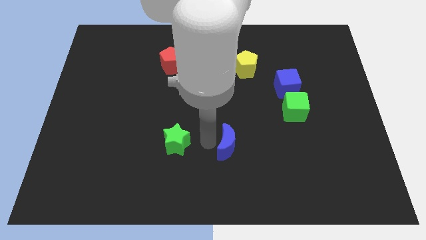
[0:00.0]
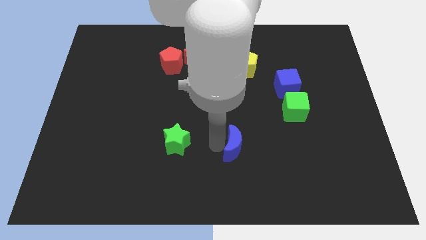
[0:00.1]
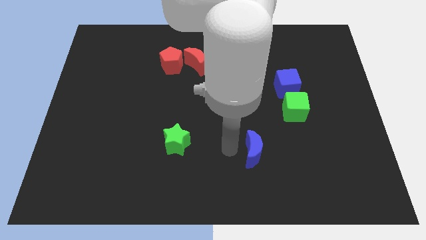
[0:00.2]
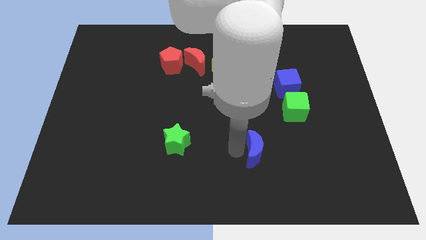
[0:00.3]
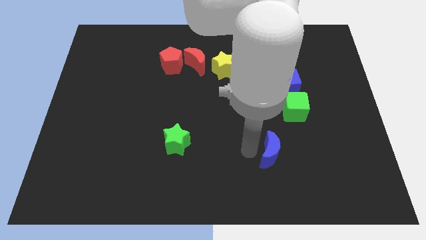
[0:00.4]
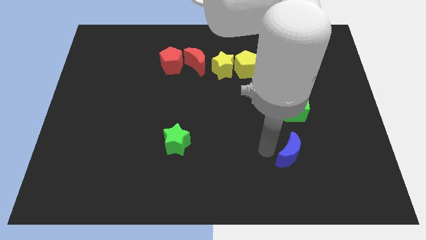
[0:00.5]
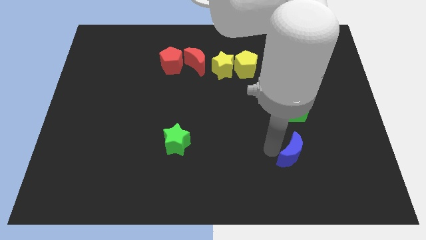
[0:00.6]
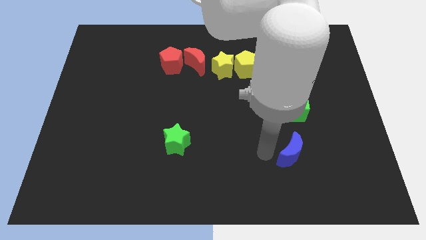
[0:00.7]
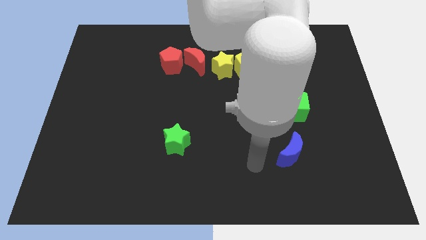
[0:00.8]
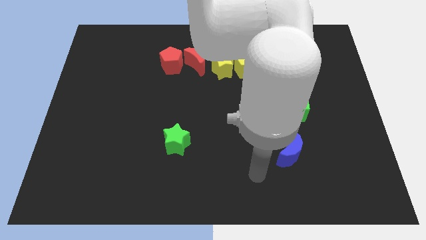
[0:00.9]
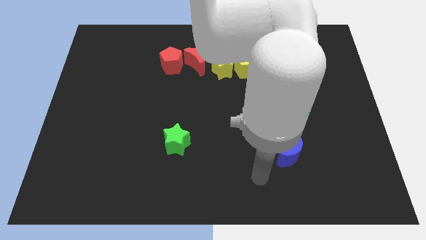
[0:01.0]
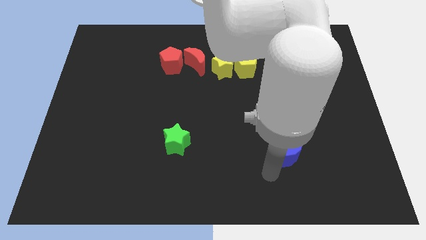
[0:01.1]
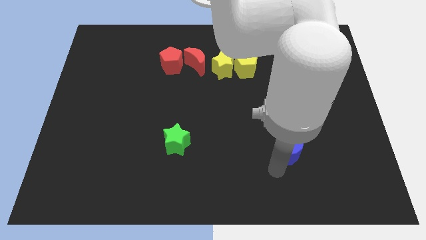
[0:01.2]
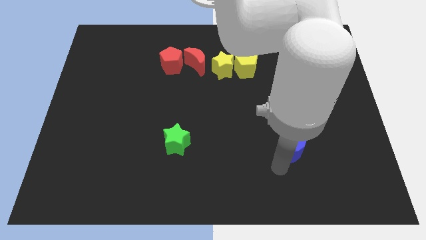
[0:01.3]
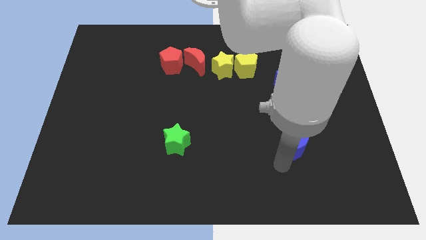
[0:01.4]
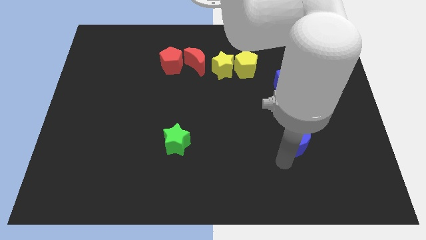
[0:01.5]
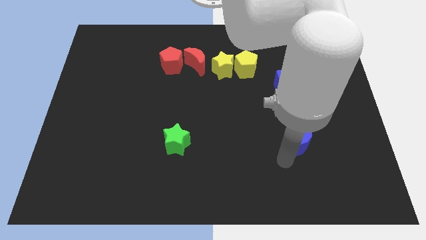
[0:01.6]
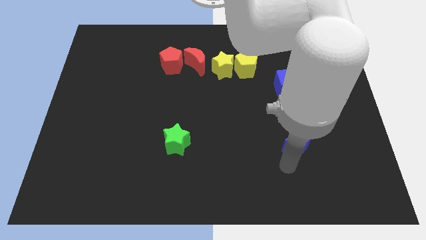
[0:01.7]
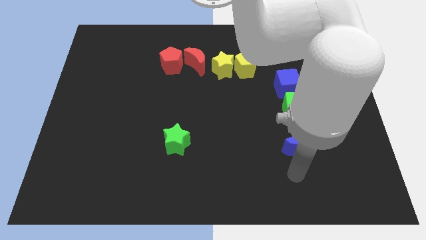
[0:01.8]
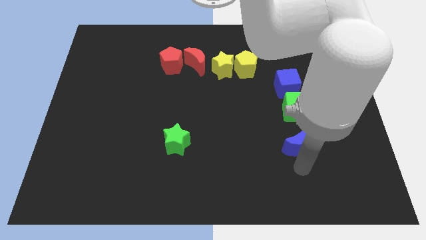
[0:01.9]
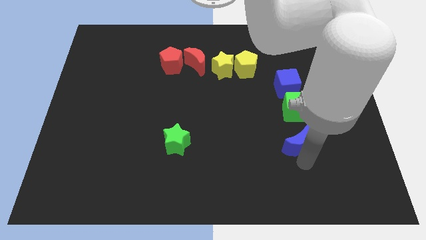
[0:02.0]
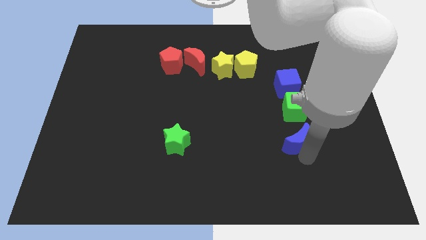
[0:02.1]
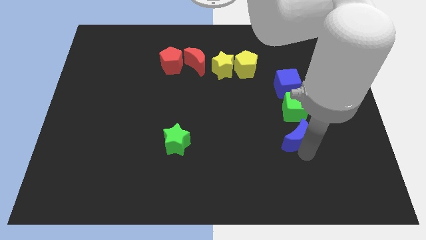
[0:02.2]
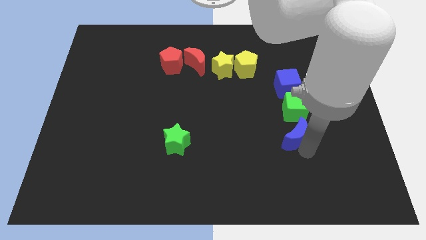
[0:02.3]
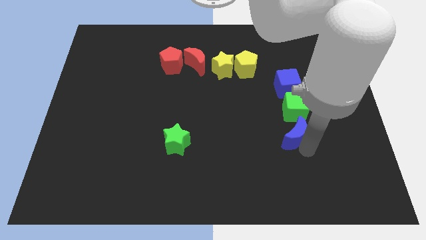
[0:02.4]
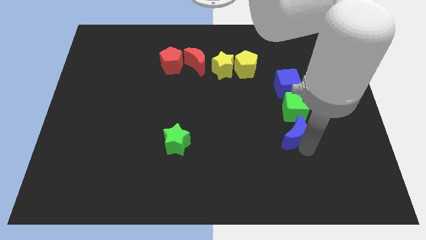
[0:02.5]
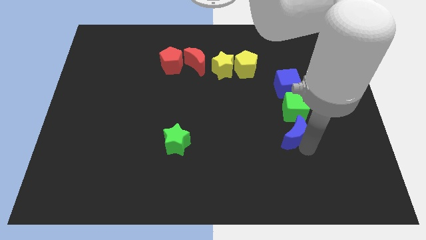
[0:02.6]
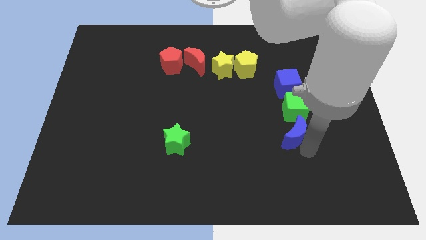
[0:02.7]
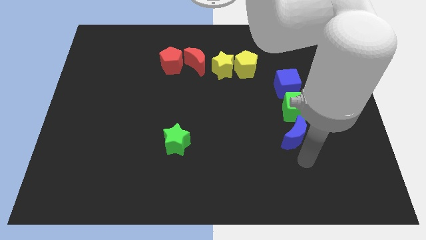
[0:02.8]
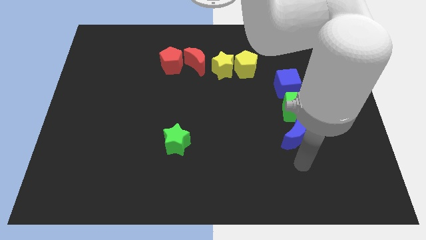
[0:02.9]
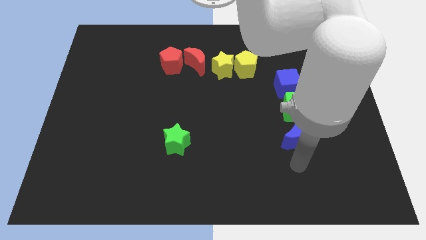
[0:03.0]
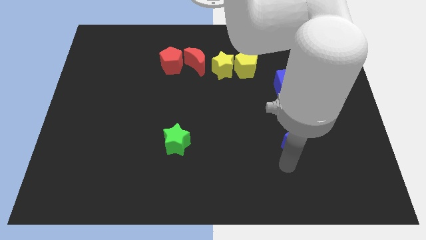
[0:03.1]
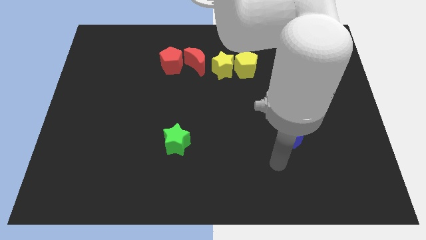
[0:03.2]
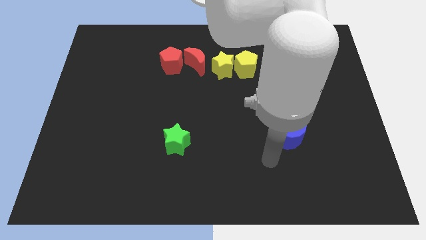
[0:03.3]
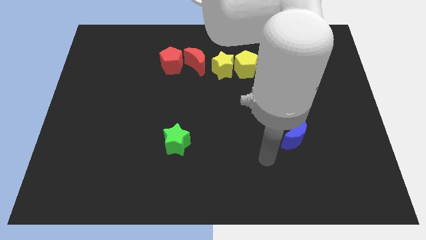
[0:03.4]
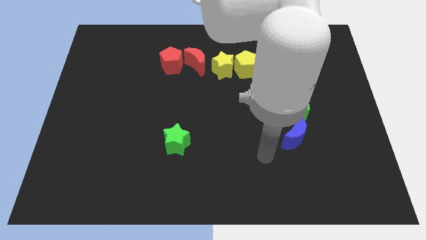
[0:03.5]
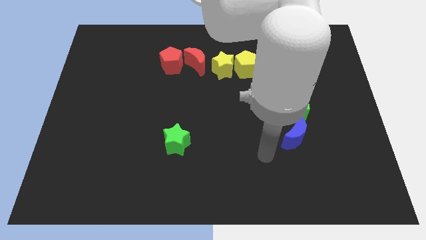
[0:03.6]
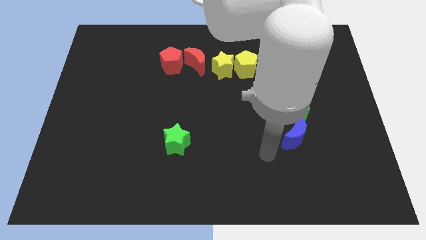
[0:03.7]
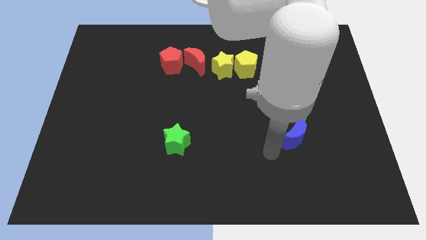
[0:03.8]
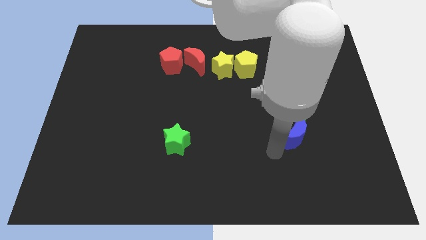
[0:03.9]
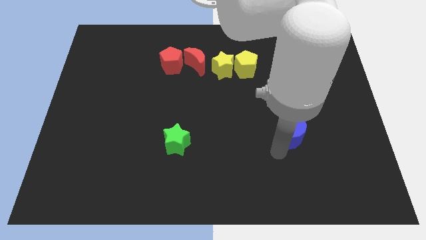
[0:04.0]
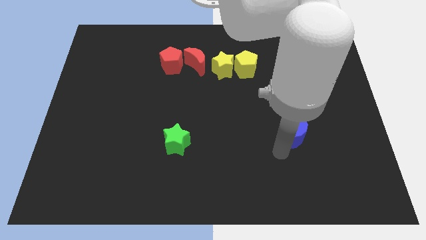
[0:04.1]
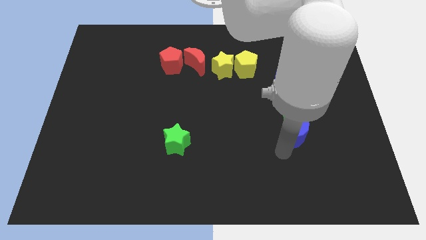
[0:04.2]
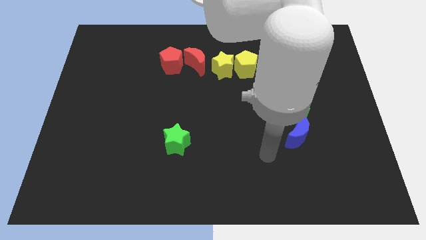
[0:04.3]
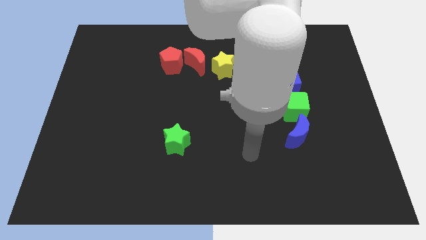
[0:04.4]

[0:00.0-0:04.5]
move blue moon to the bottom of green cube

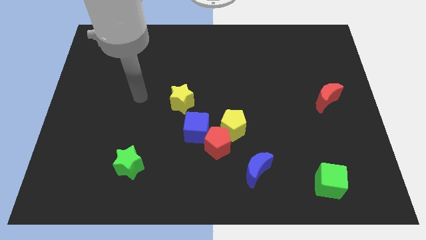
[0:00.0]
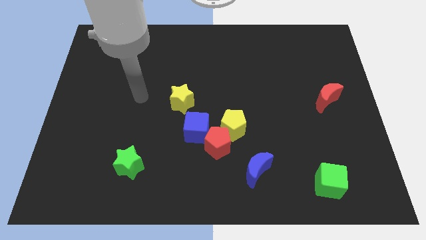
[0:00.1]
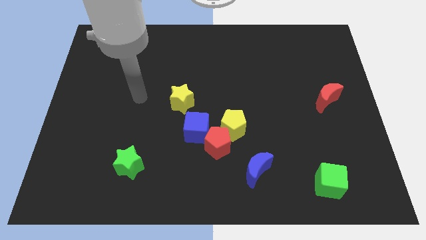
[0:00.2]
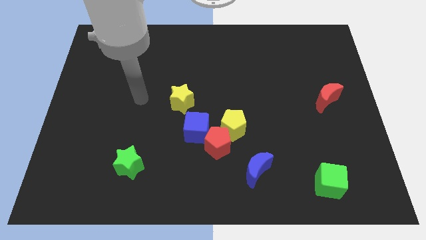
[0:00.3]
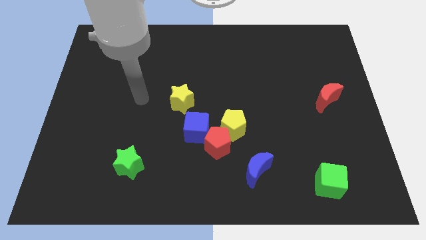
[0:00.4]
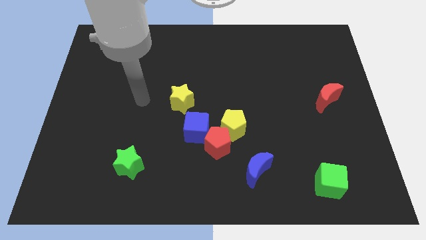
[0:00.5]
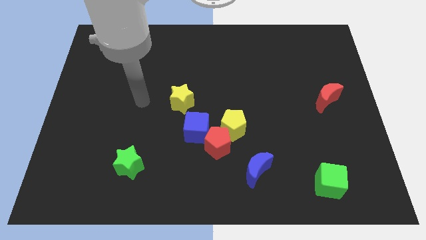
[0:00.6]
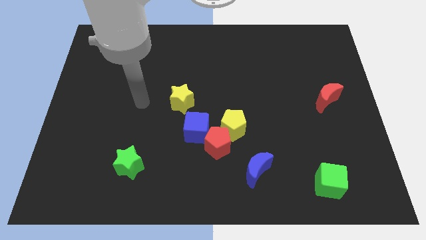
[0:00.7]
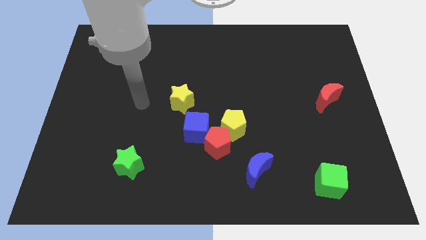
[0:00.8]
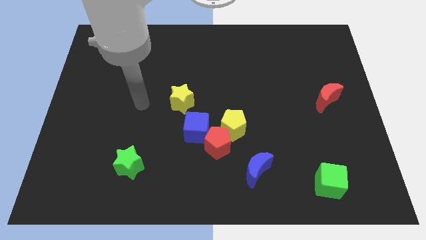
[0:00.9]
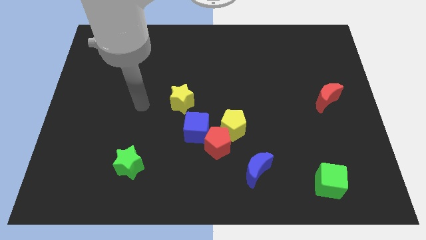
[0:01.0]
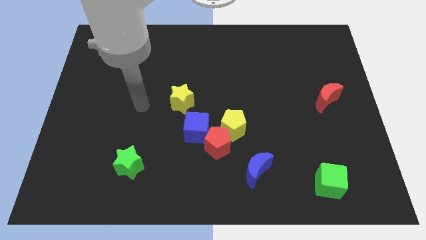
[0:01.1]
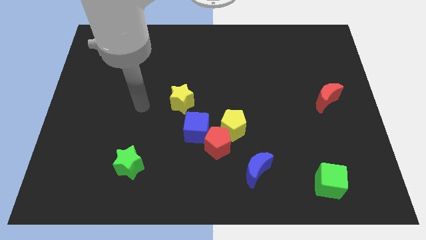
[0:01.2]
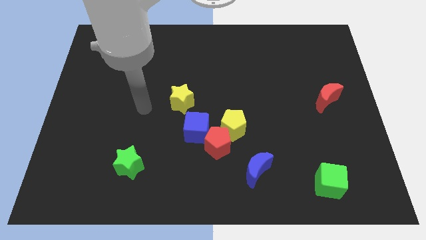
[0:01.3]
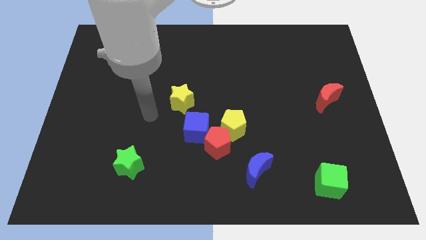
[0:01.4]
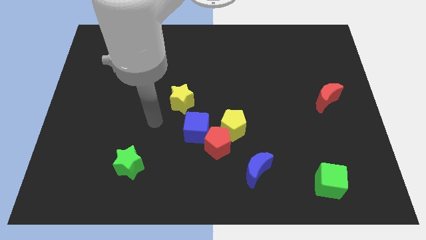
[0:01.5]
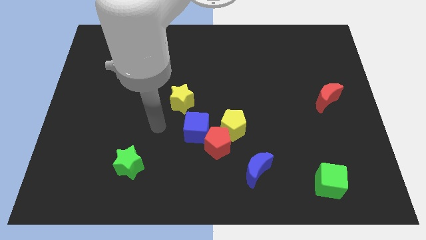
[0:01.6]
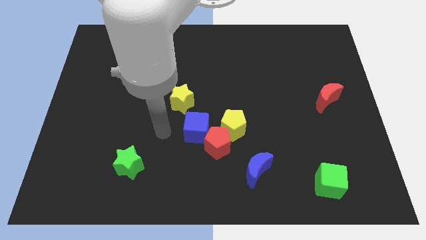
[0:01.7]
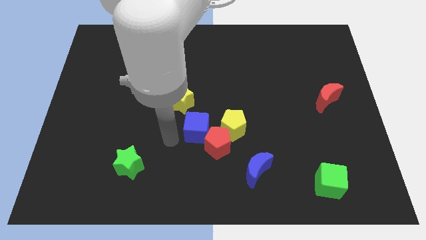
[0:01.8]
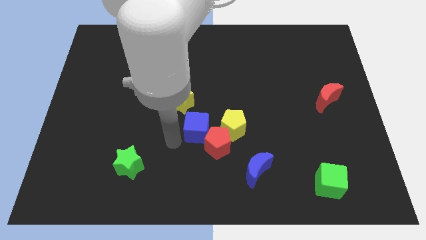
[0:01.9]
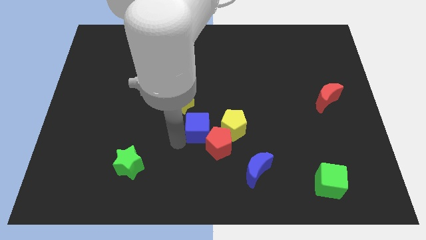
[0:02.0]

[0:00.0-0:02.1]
move your arm towards the blue cube

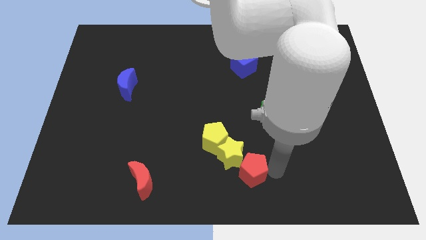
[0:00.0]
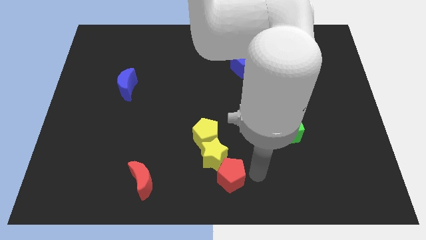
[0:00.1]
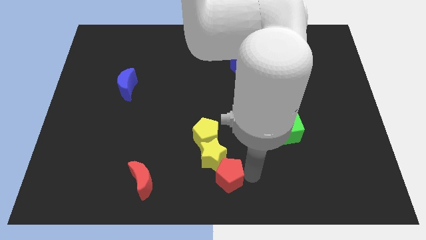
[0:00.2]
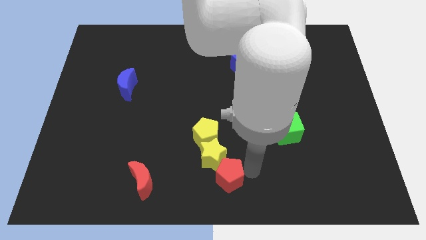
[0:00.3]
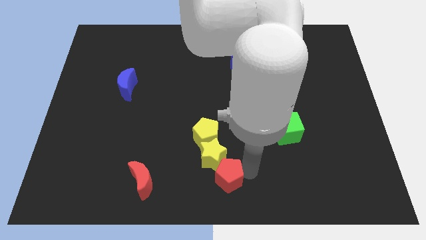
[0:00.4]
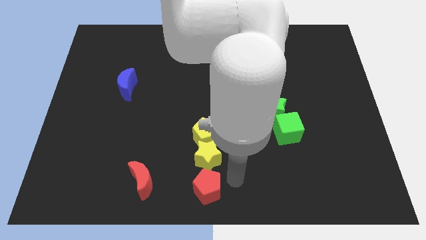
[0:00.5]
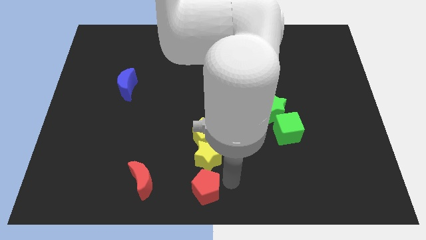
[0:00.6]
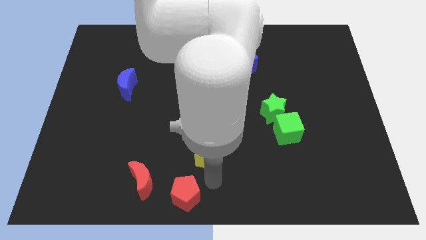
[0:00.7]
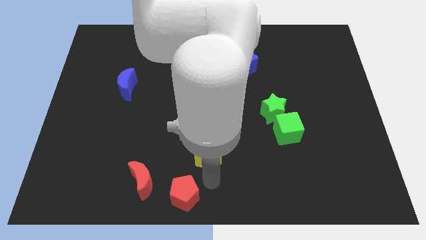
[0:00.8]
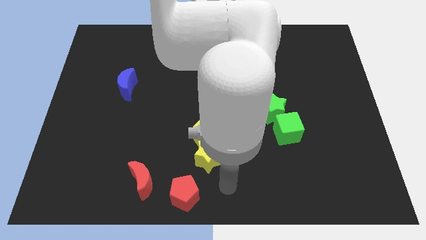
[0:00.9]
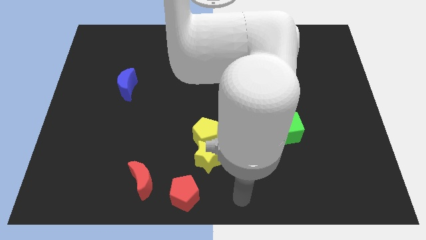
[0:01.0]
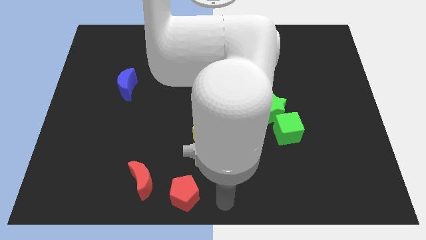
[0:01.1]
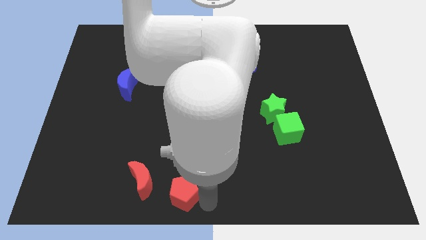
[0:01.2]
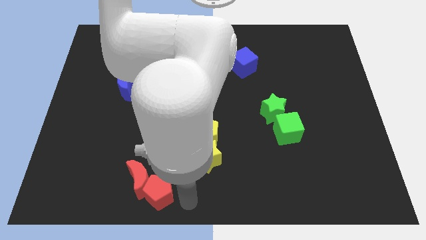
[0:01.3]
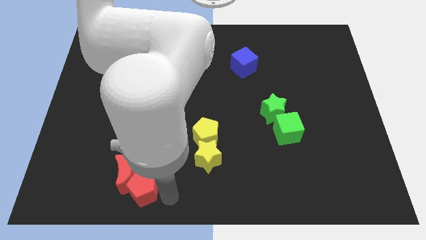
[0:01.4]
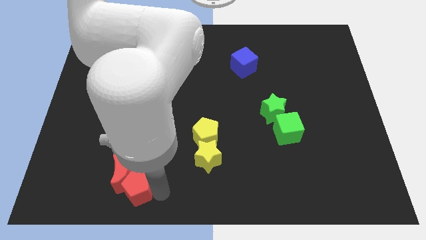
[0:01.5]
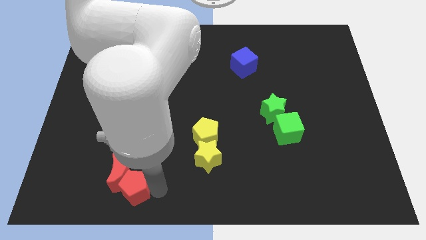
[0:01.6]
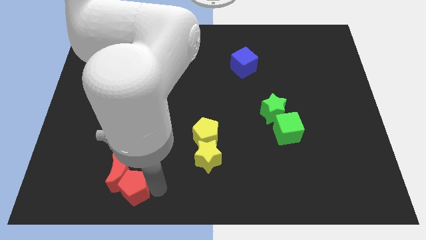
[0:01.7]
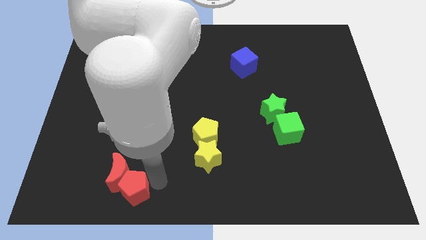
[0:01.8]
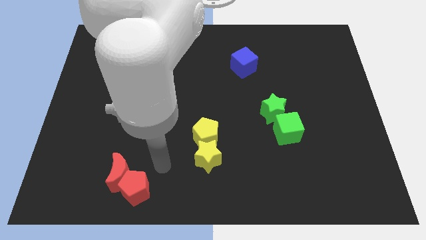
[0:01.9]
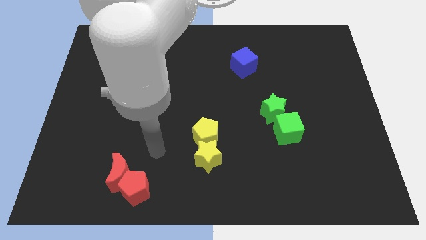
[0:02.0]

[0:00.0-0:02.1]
separate the red pentagon from the yellow blocks

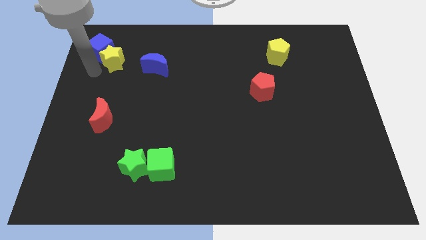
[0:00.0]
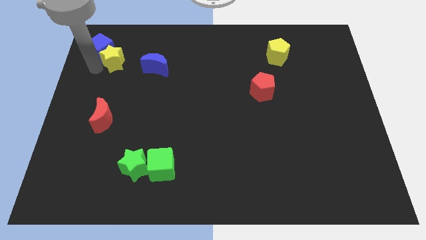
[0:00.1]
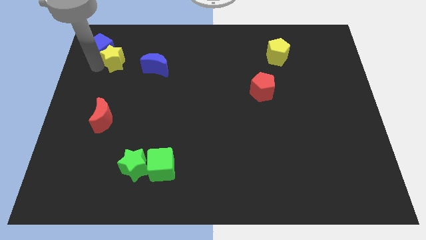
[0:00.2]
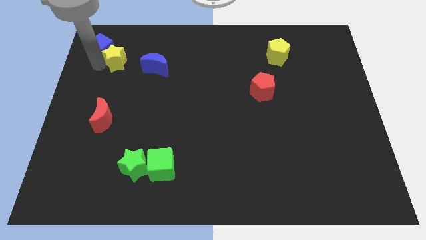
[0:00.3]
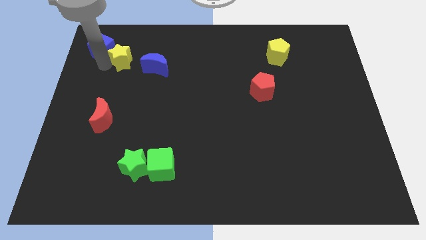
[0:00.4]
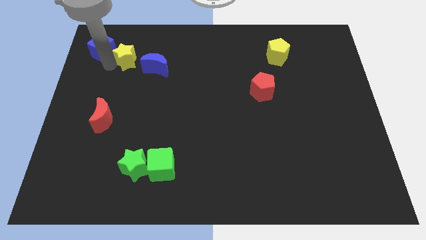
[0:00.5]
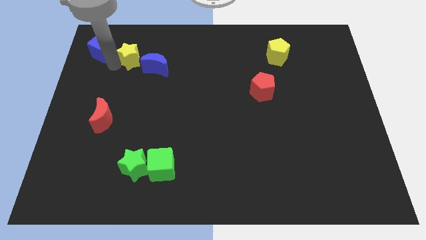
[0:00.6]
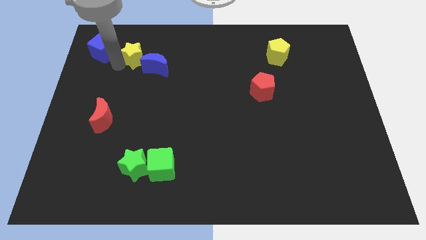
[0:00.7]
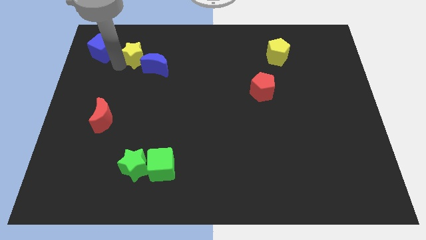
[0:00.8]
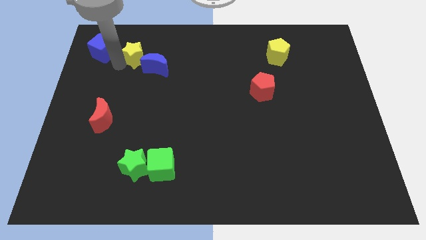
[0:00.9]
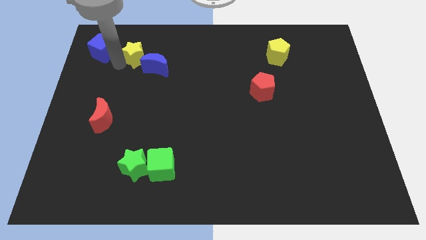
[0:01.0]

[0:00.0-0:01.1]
move yellow star to the left of blue moon
